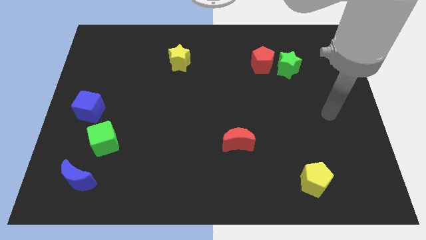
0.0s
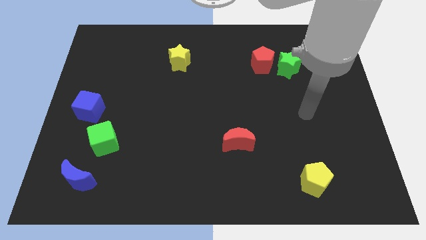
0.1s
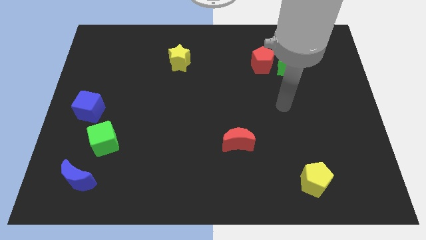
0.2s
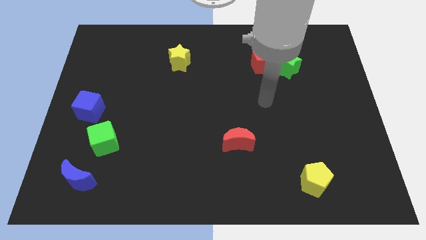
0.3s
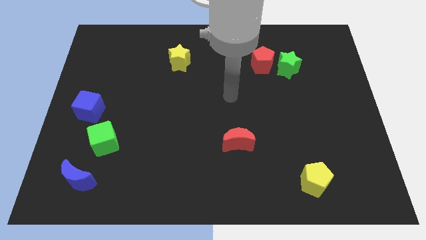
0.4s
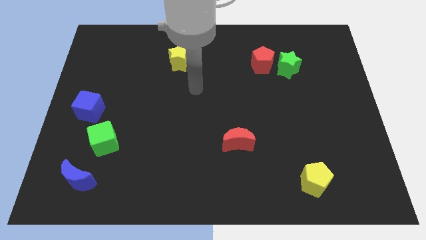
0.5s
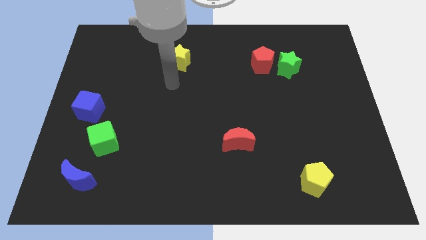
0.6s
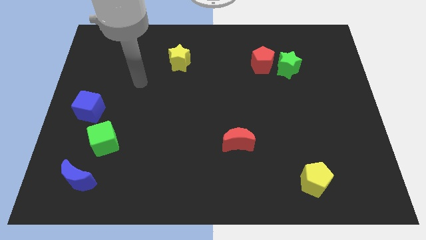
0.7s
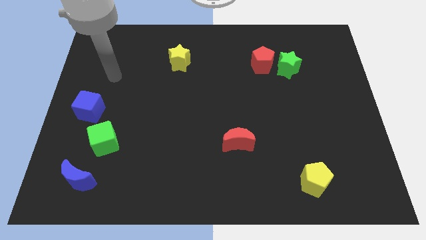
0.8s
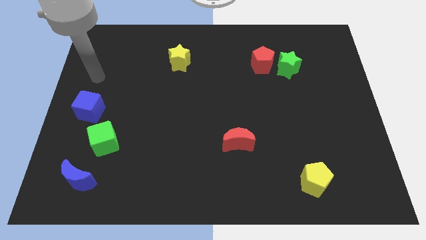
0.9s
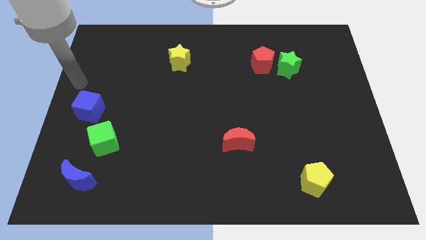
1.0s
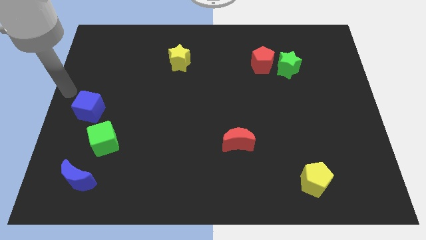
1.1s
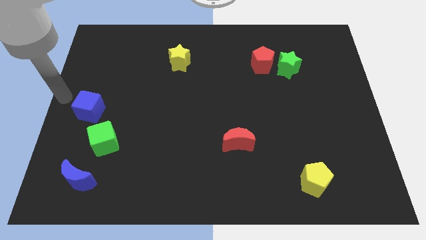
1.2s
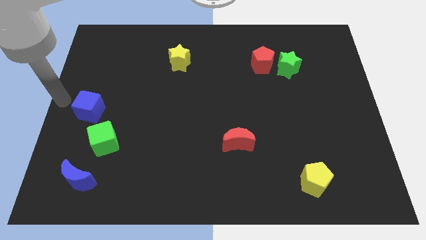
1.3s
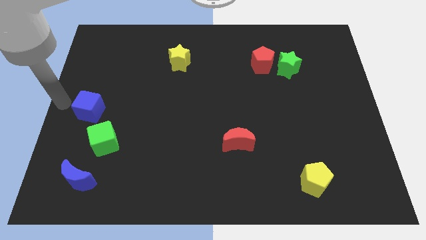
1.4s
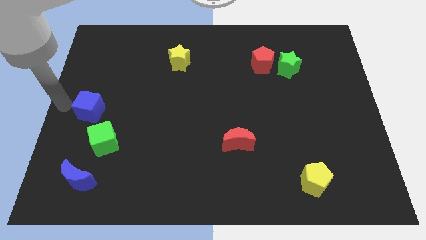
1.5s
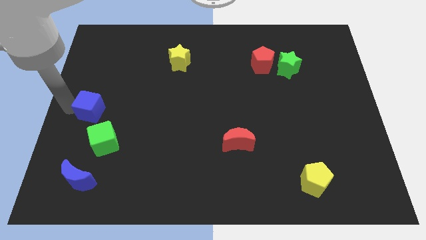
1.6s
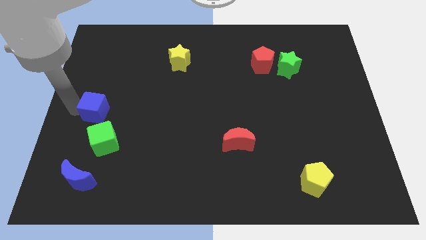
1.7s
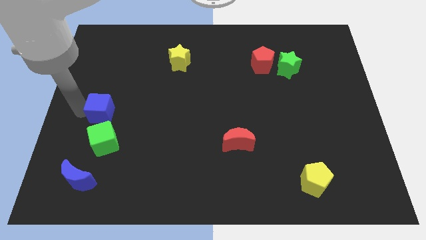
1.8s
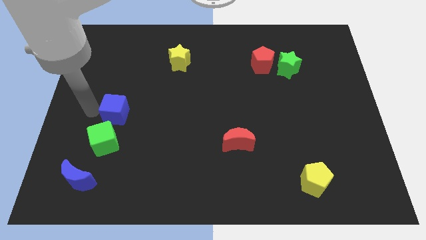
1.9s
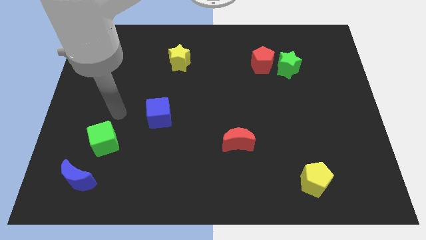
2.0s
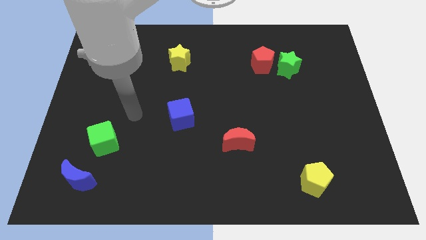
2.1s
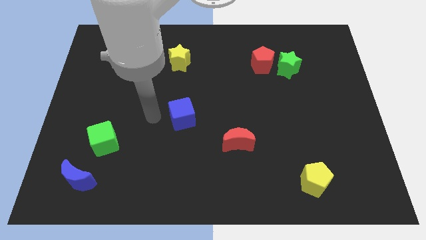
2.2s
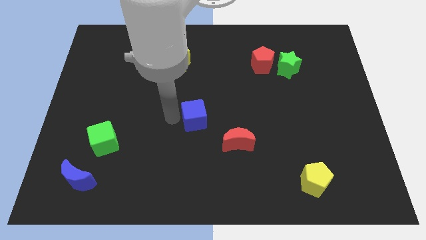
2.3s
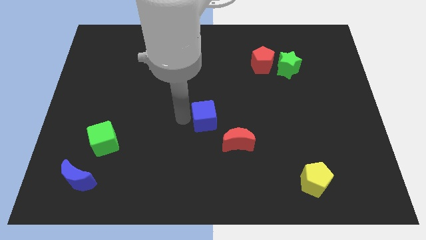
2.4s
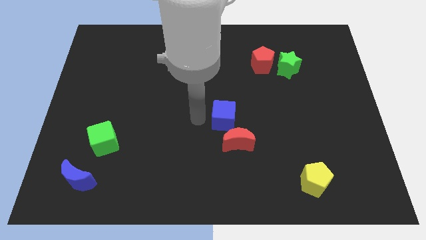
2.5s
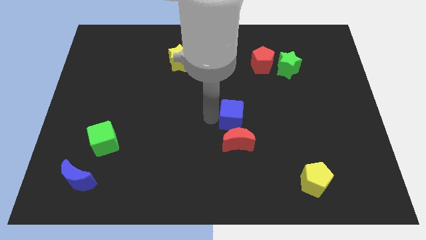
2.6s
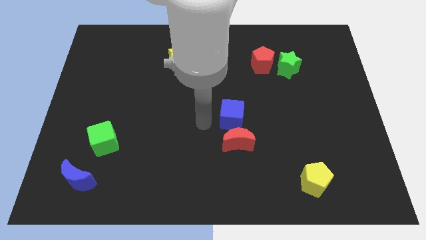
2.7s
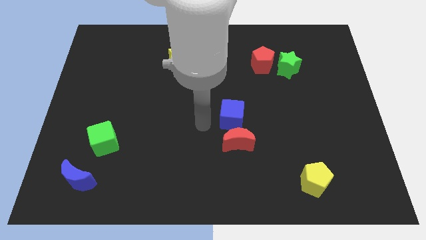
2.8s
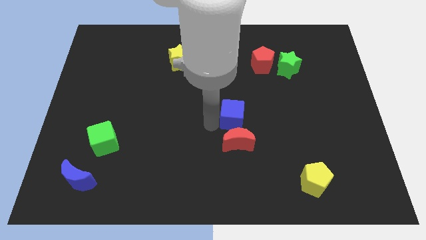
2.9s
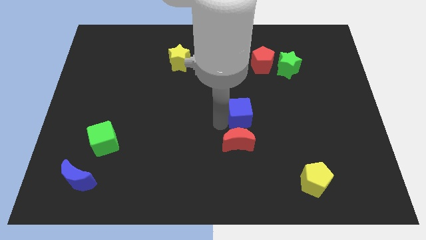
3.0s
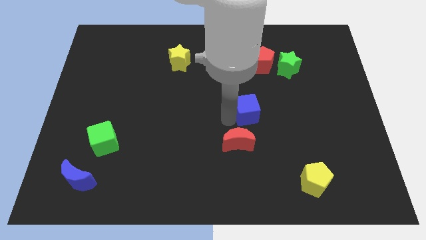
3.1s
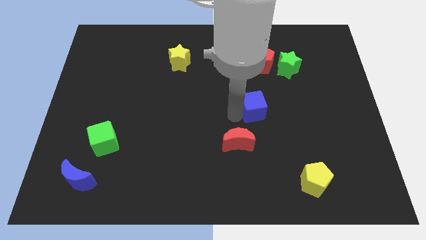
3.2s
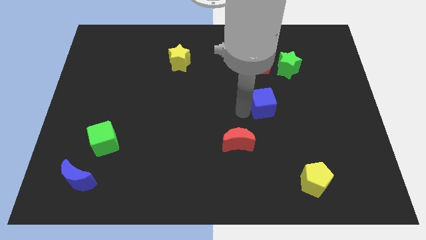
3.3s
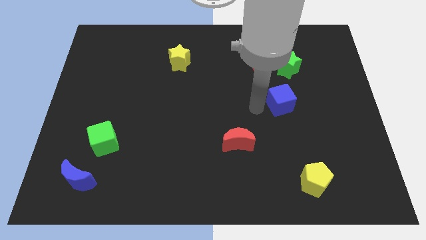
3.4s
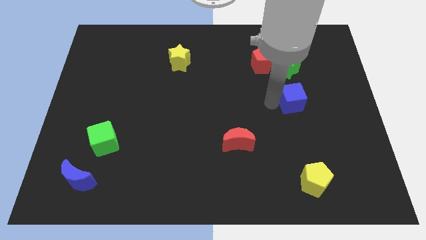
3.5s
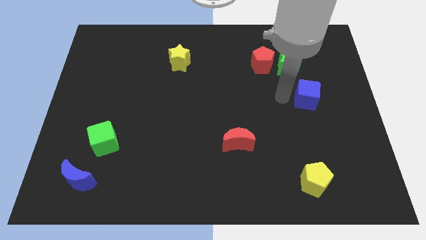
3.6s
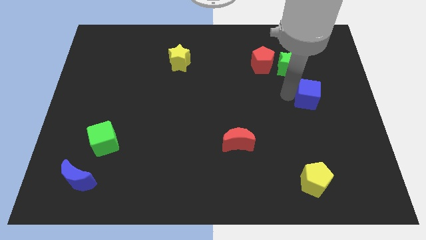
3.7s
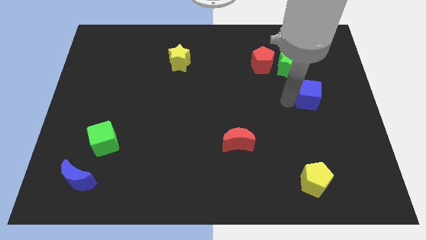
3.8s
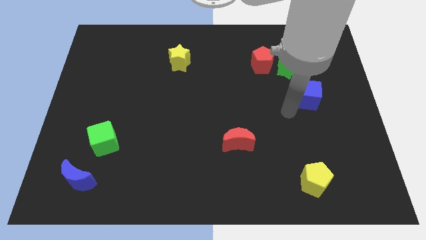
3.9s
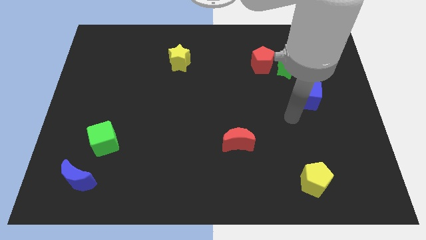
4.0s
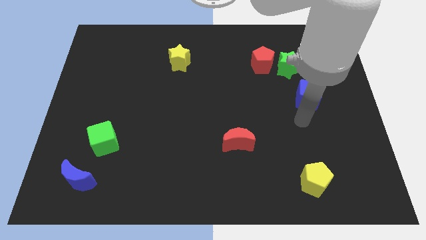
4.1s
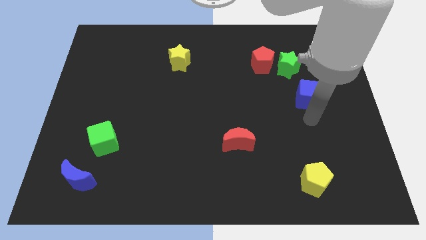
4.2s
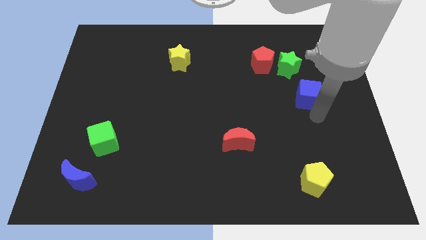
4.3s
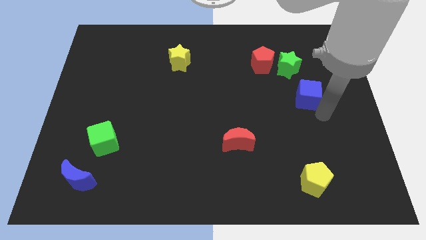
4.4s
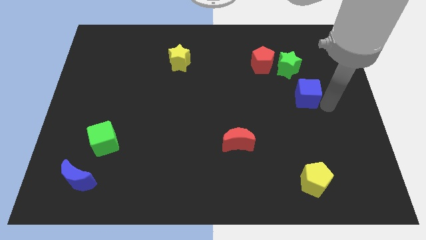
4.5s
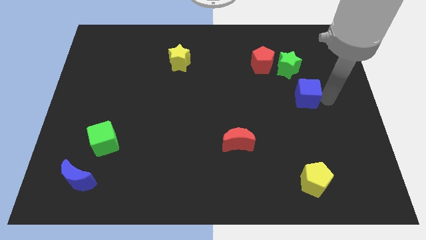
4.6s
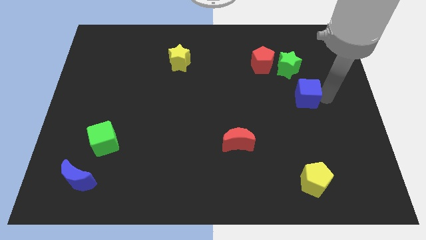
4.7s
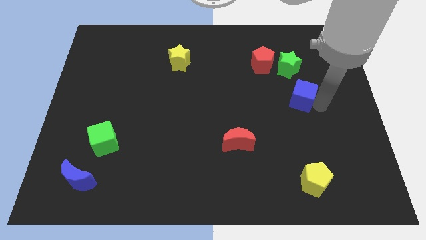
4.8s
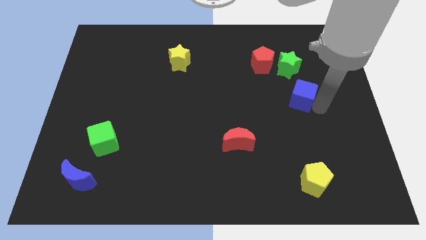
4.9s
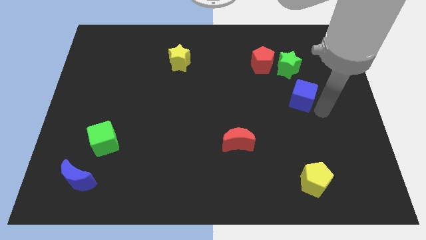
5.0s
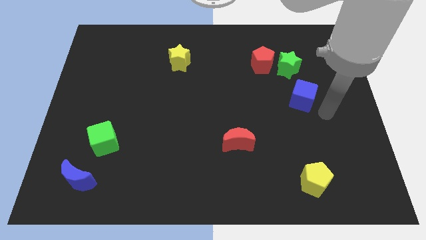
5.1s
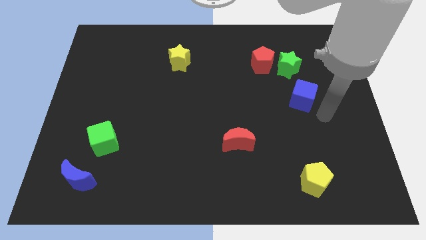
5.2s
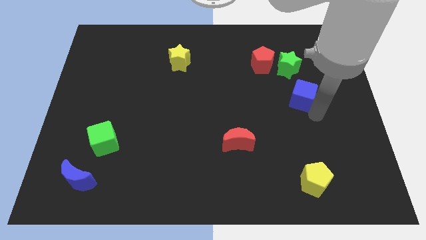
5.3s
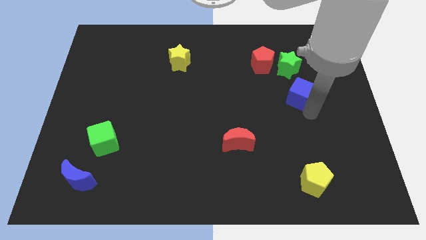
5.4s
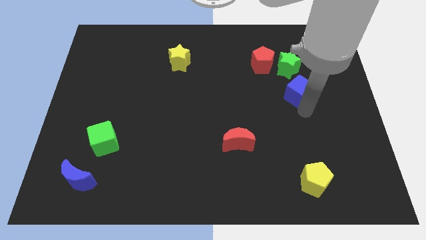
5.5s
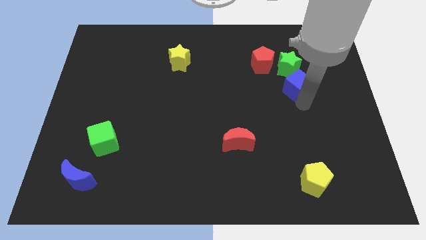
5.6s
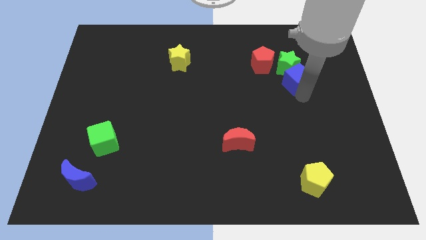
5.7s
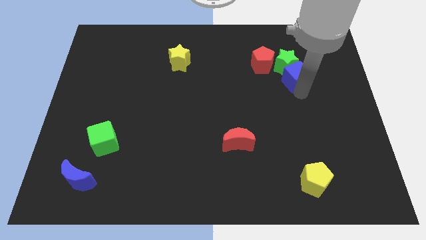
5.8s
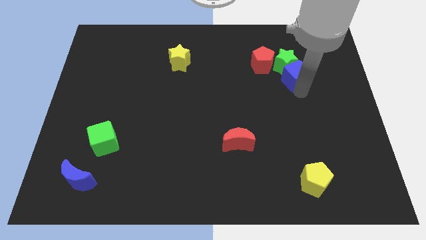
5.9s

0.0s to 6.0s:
slide the blue cube to the green star

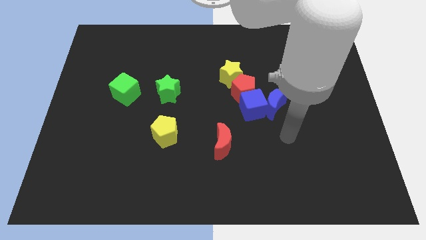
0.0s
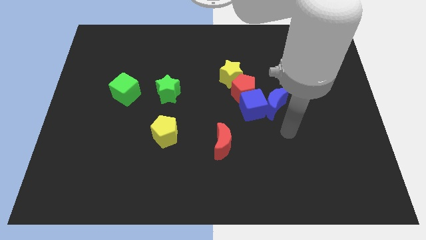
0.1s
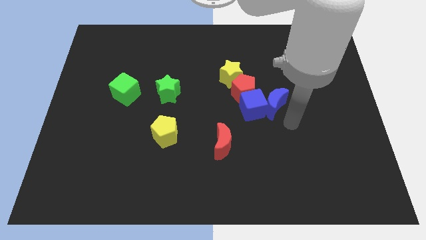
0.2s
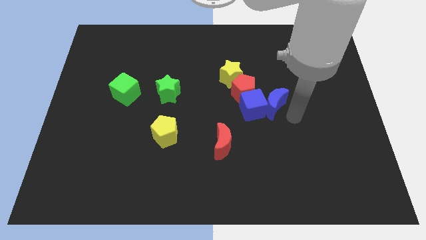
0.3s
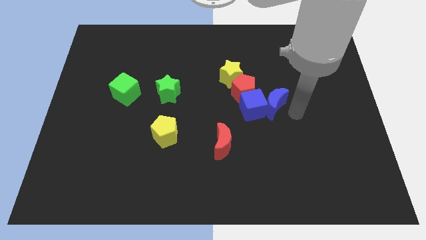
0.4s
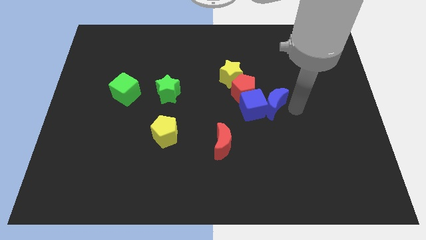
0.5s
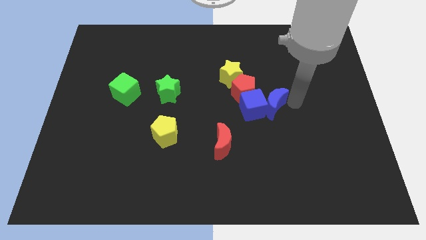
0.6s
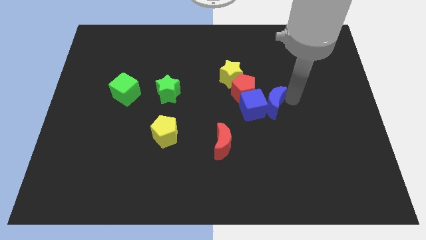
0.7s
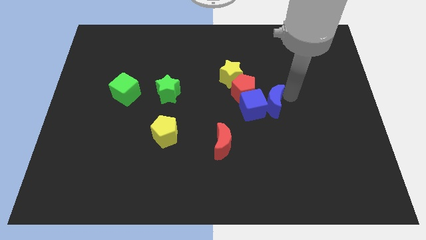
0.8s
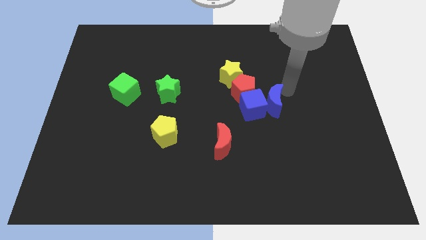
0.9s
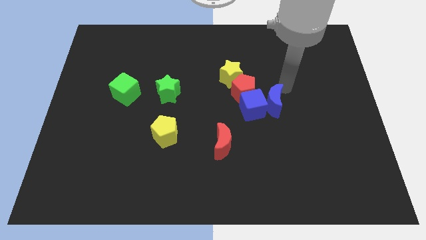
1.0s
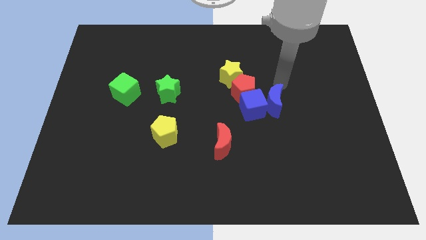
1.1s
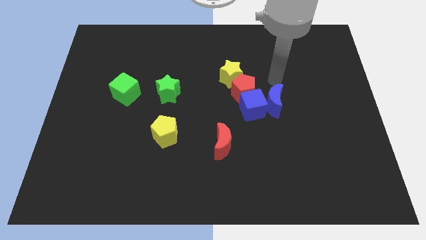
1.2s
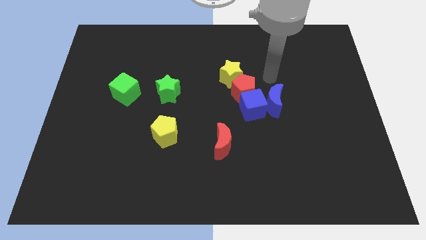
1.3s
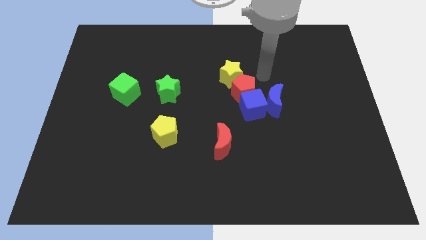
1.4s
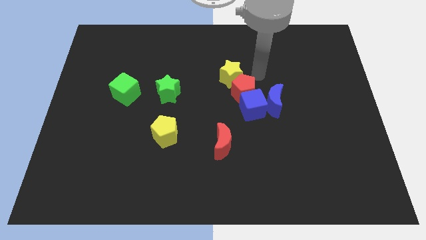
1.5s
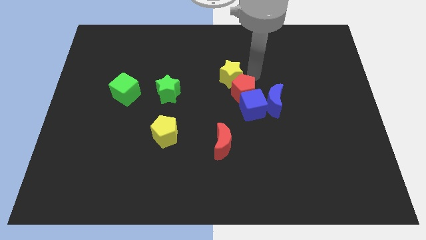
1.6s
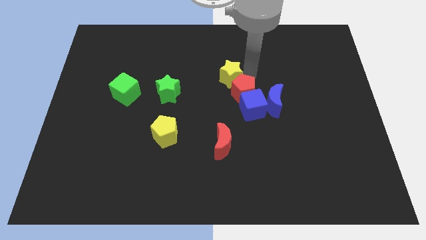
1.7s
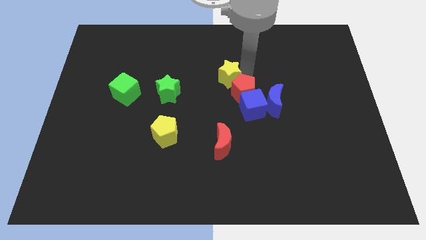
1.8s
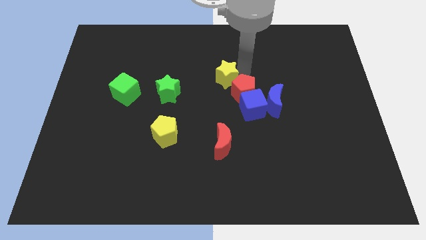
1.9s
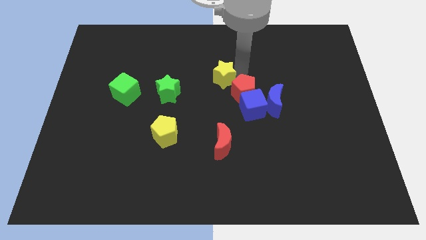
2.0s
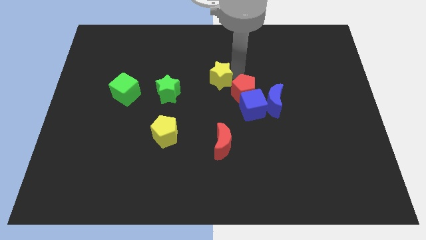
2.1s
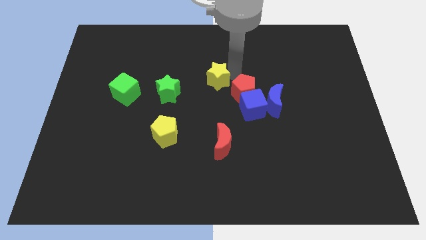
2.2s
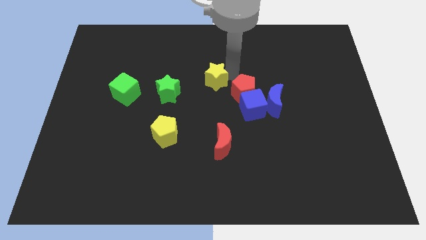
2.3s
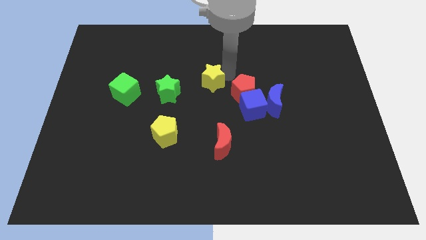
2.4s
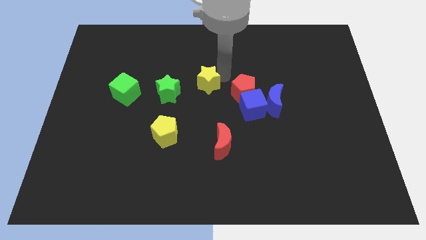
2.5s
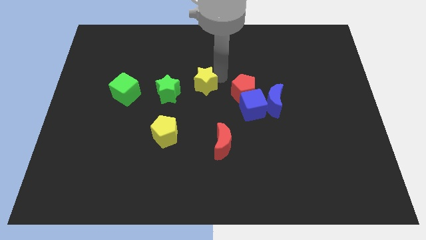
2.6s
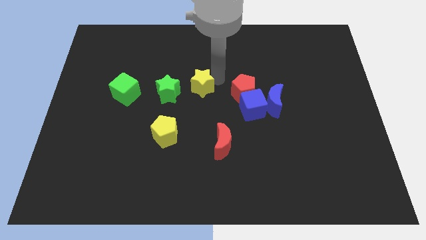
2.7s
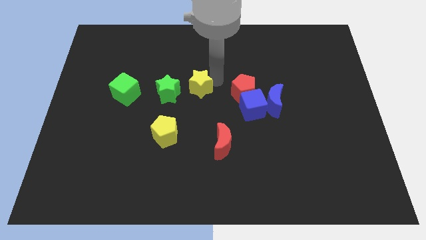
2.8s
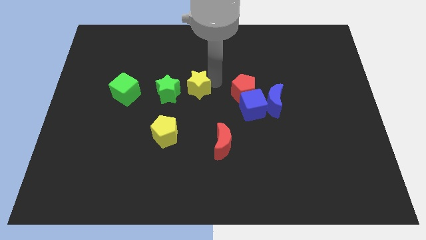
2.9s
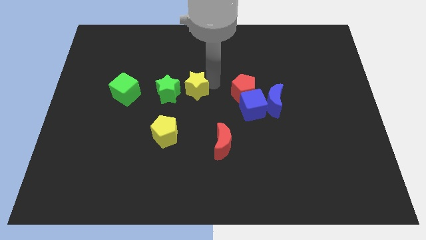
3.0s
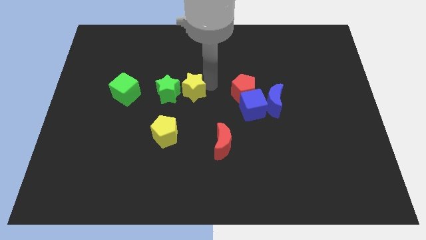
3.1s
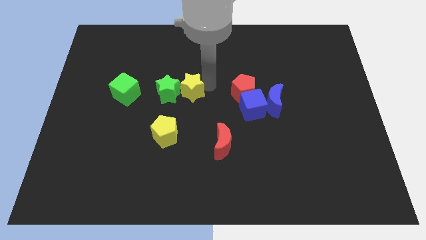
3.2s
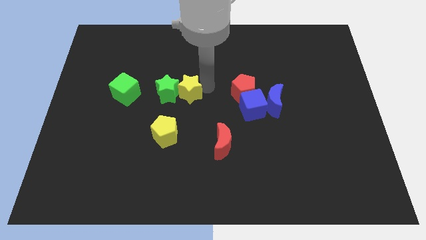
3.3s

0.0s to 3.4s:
slide the yellow star close to the green star
